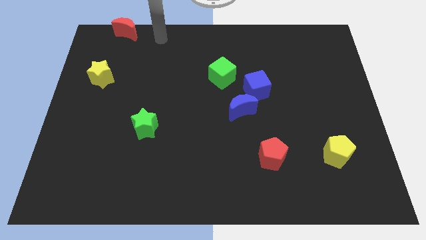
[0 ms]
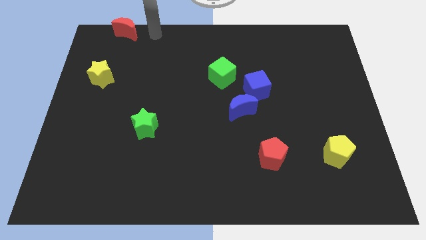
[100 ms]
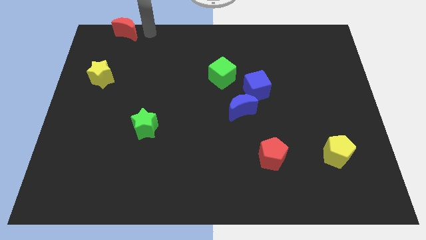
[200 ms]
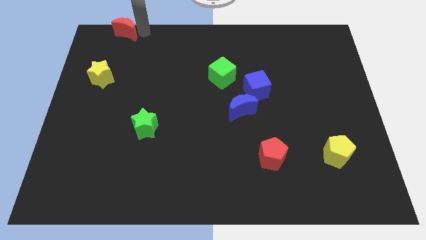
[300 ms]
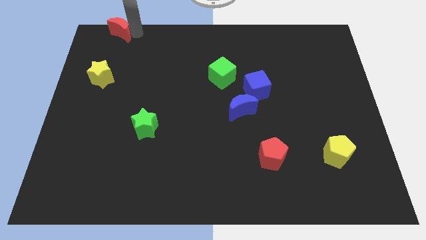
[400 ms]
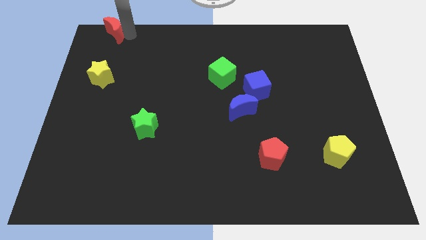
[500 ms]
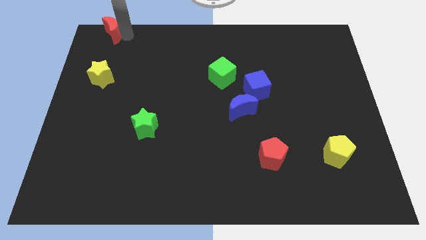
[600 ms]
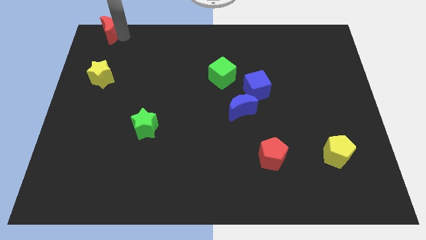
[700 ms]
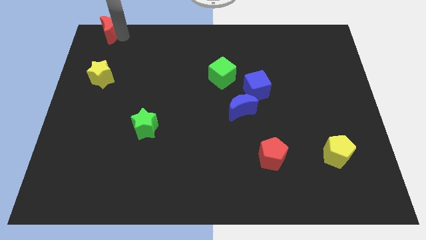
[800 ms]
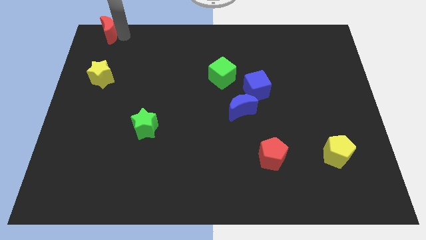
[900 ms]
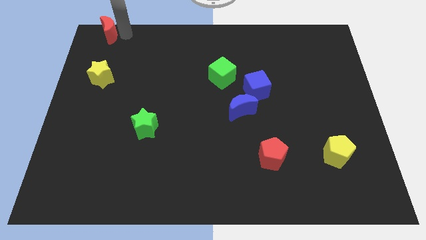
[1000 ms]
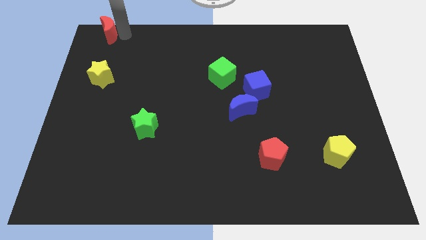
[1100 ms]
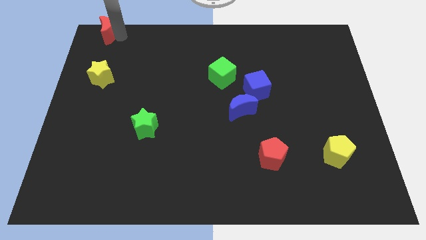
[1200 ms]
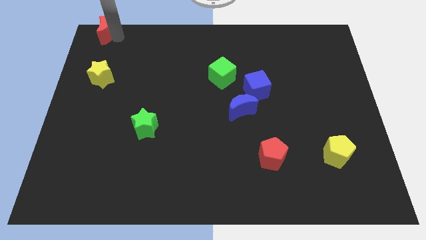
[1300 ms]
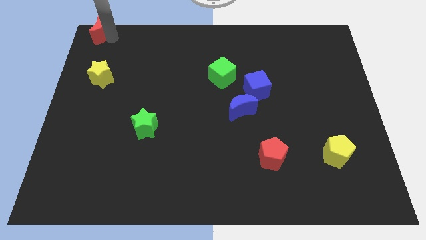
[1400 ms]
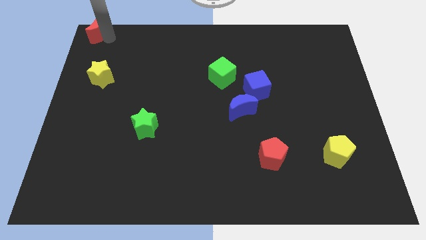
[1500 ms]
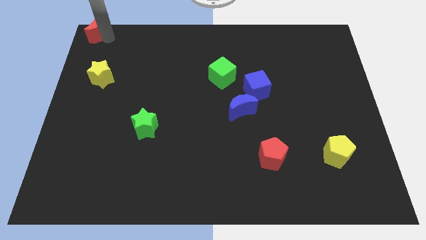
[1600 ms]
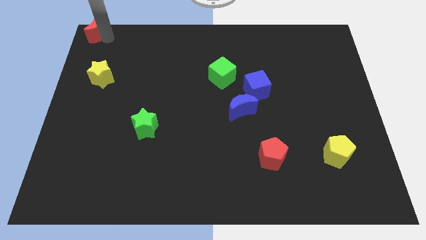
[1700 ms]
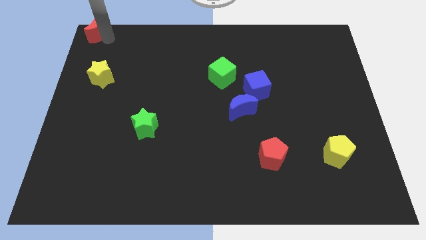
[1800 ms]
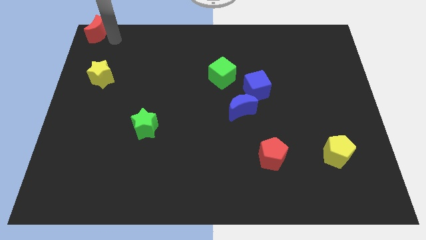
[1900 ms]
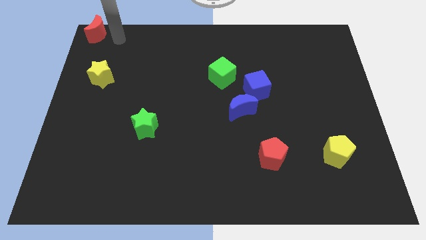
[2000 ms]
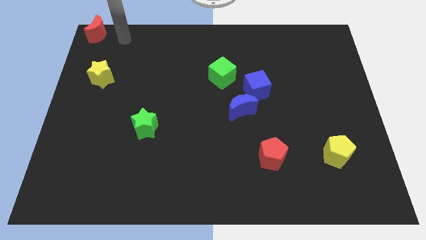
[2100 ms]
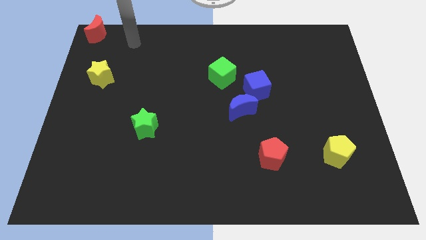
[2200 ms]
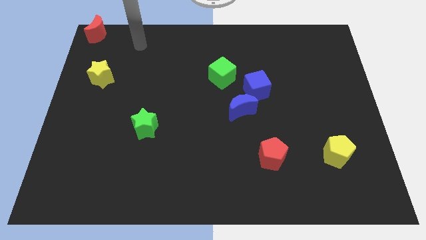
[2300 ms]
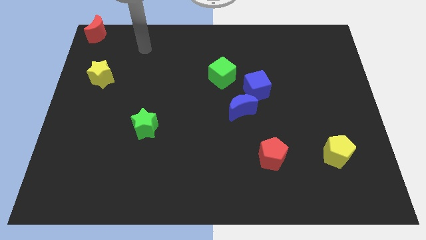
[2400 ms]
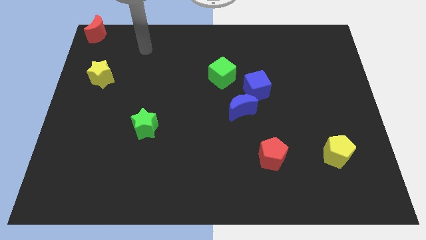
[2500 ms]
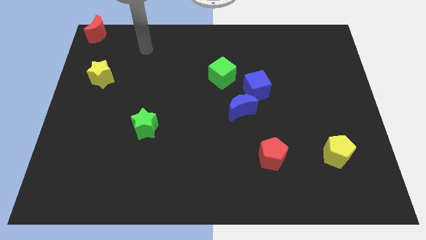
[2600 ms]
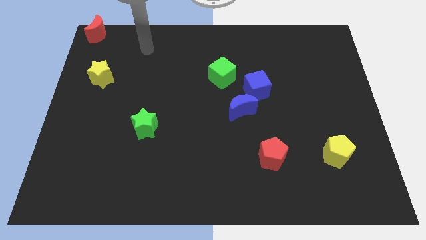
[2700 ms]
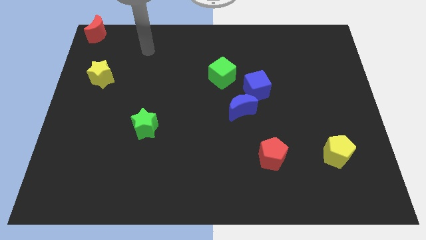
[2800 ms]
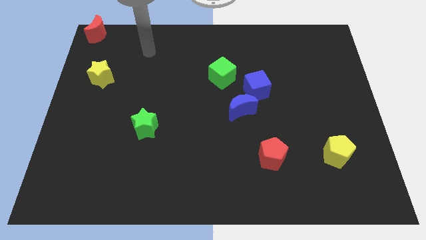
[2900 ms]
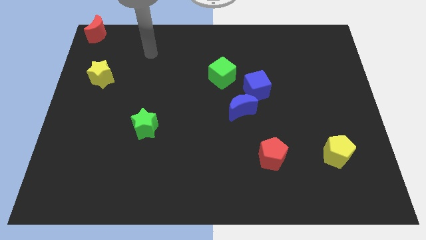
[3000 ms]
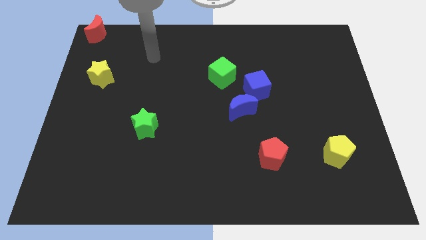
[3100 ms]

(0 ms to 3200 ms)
move red moon to the top left corner

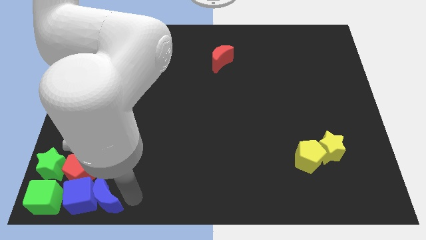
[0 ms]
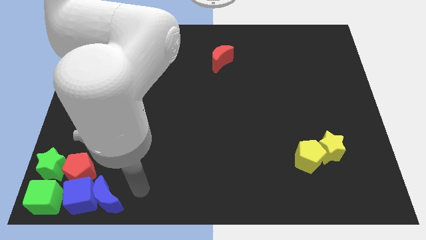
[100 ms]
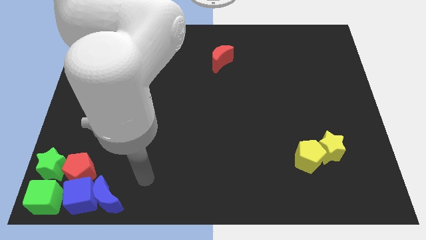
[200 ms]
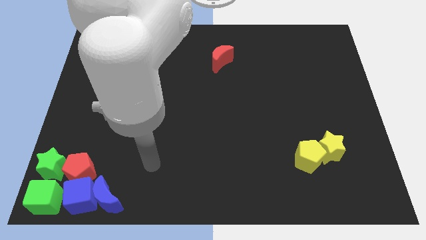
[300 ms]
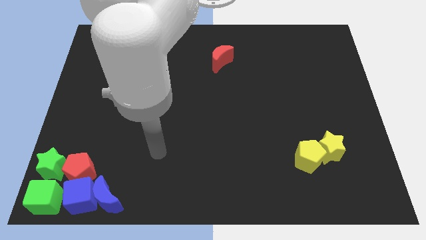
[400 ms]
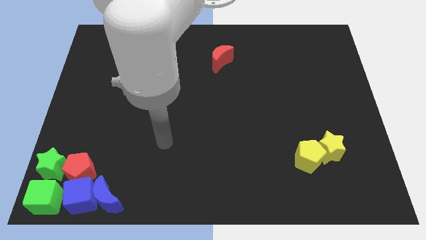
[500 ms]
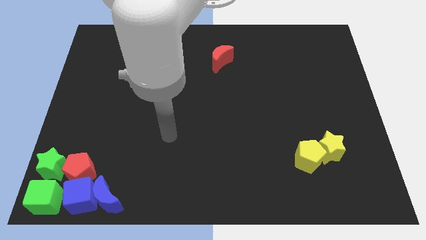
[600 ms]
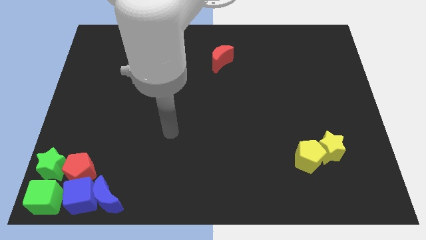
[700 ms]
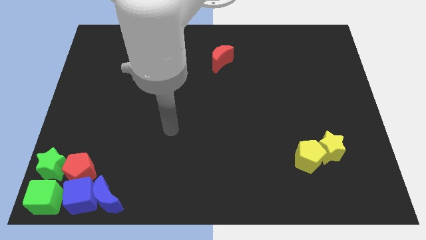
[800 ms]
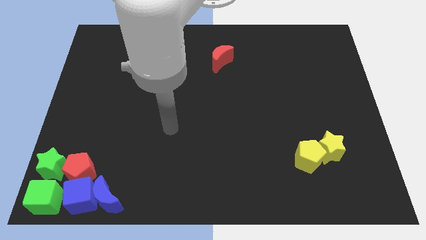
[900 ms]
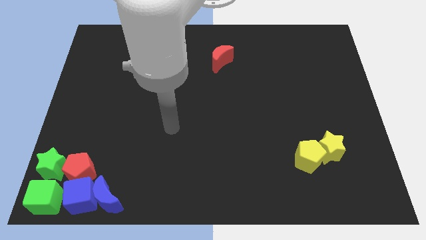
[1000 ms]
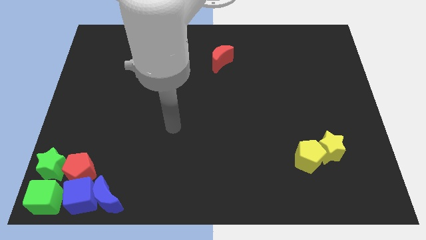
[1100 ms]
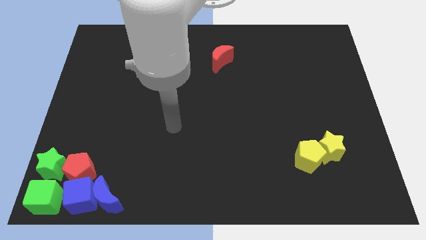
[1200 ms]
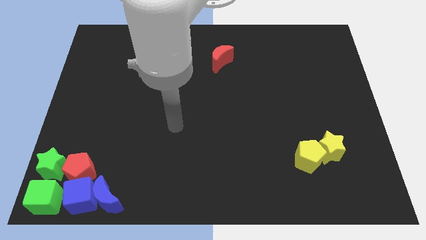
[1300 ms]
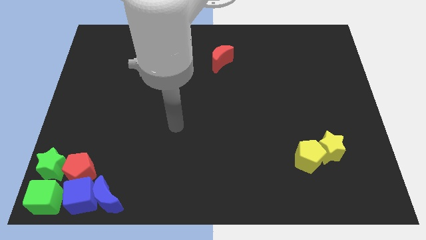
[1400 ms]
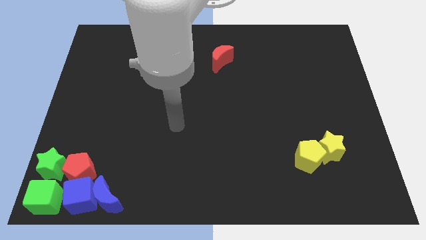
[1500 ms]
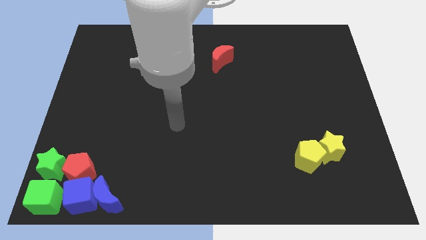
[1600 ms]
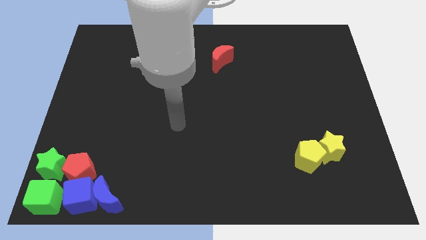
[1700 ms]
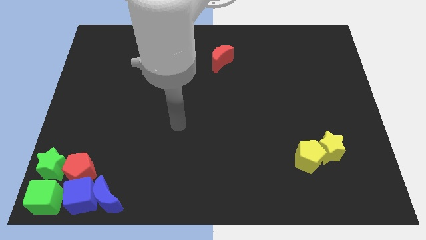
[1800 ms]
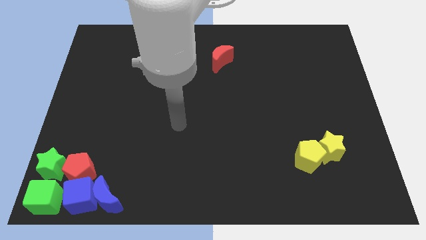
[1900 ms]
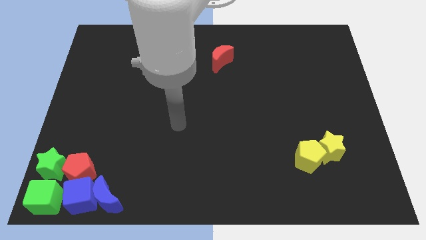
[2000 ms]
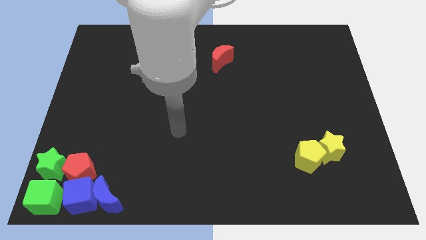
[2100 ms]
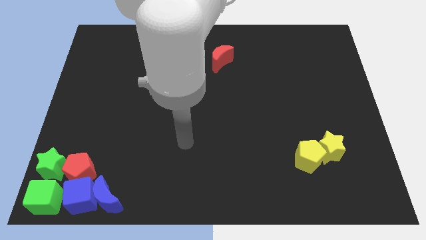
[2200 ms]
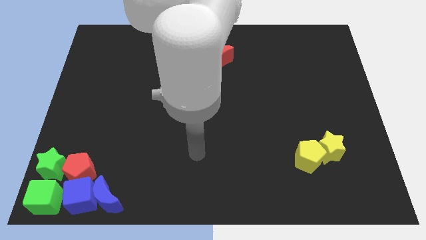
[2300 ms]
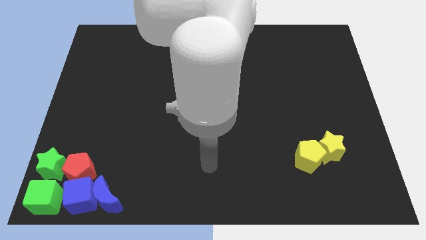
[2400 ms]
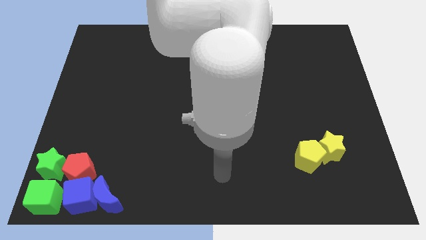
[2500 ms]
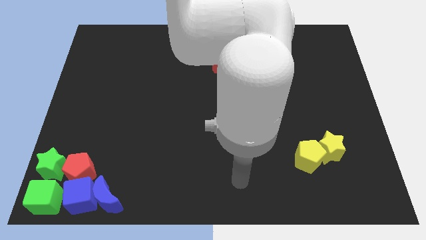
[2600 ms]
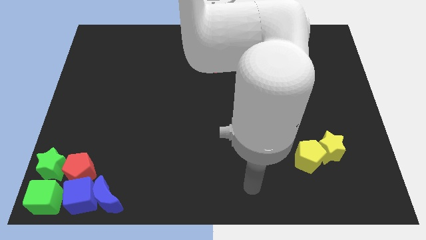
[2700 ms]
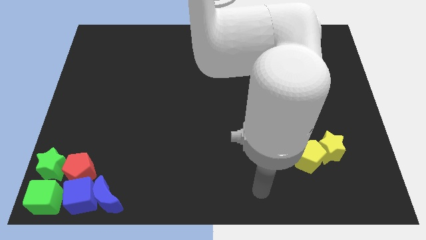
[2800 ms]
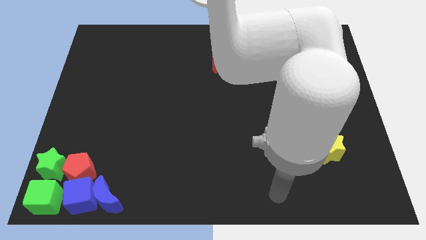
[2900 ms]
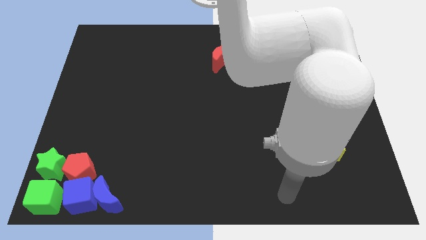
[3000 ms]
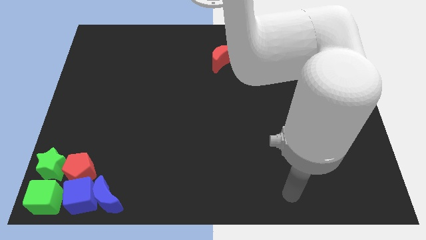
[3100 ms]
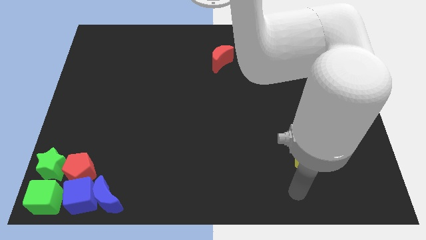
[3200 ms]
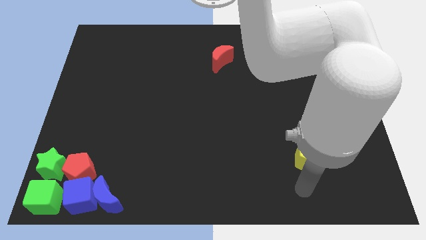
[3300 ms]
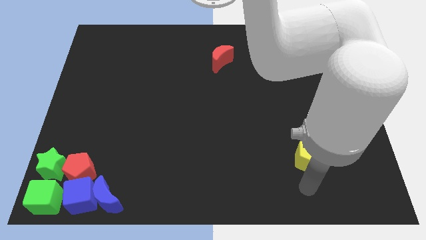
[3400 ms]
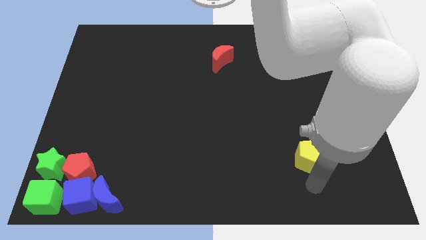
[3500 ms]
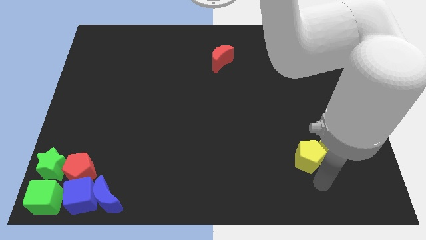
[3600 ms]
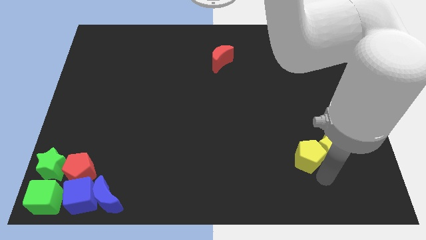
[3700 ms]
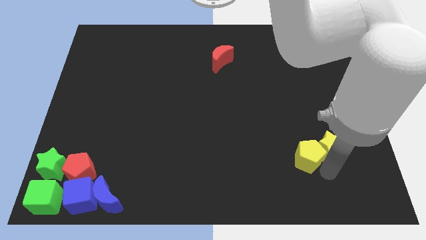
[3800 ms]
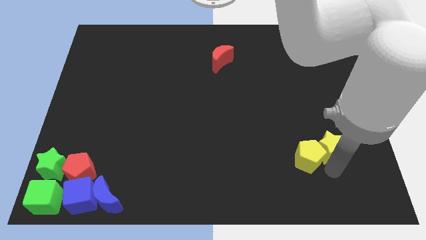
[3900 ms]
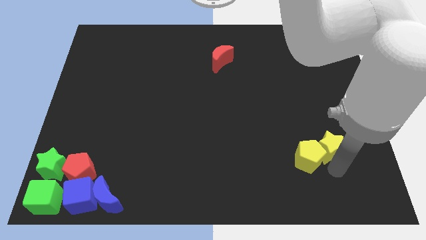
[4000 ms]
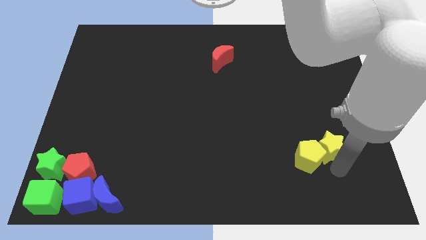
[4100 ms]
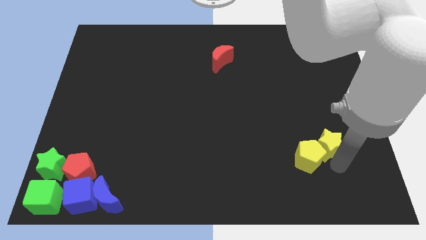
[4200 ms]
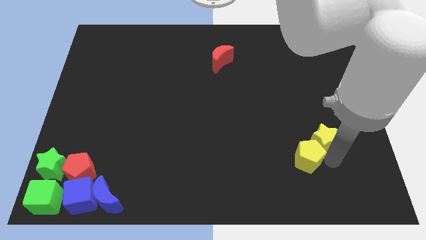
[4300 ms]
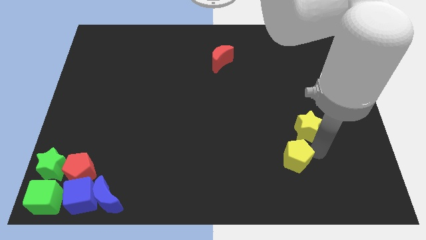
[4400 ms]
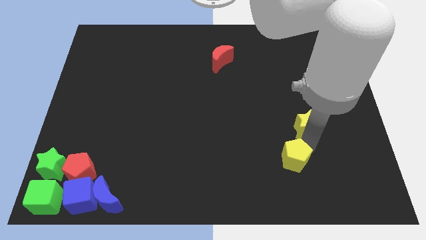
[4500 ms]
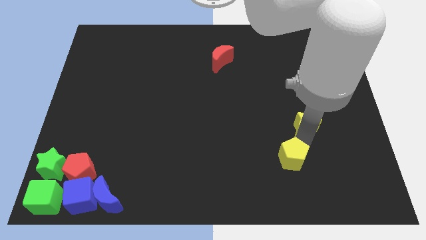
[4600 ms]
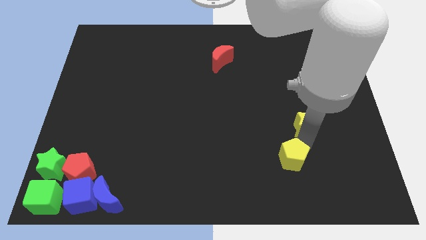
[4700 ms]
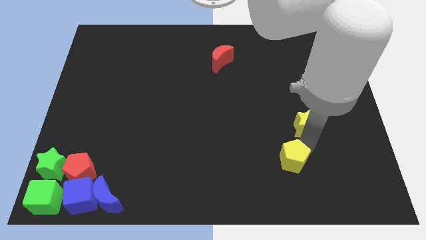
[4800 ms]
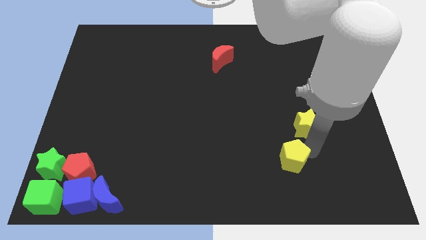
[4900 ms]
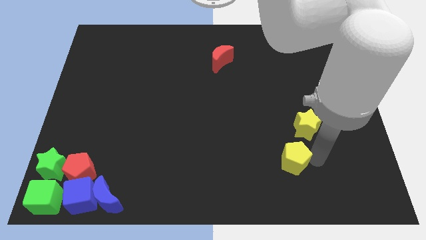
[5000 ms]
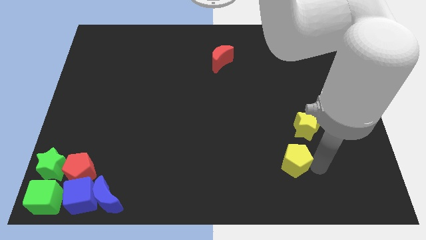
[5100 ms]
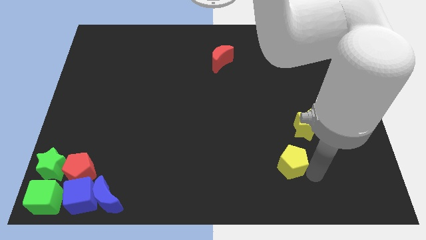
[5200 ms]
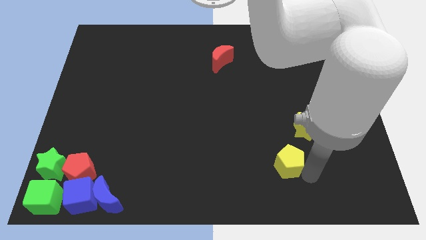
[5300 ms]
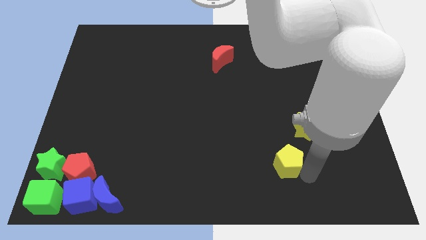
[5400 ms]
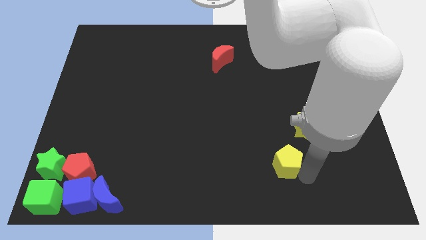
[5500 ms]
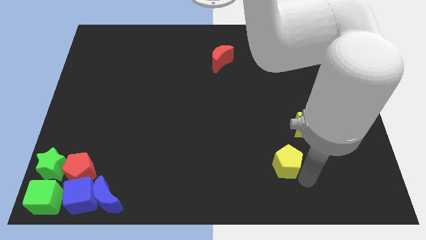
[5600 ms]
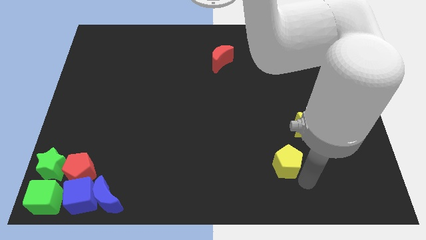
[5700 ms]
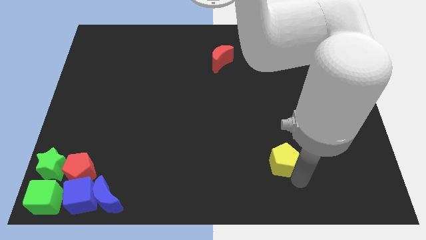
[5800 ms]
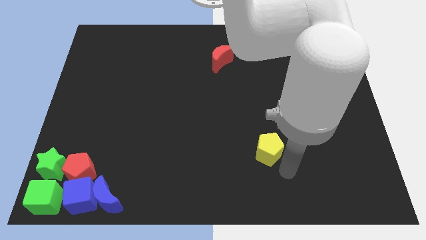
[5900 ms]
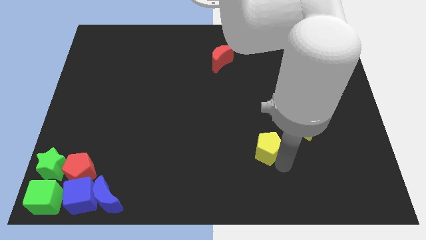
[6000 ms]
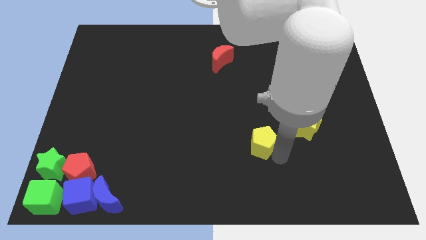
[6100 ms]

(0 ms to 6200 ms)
separate the both yellow blocks from each other
